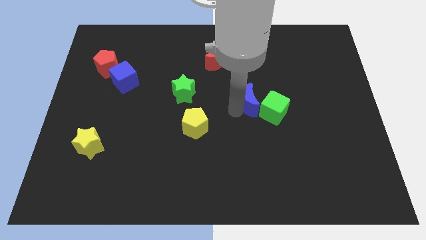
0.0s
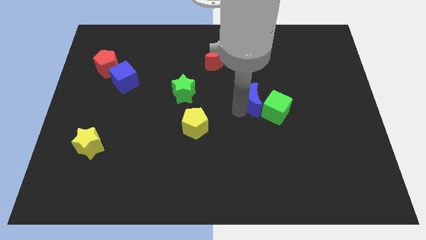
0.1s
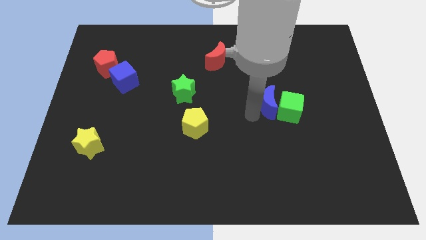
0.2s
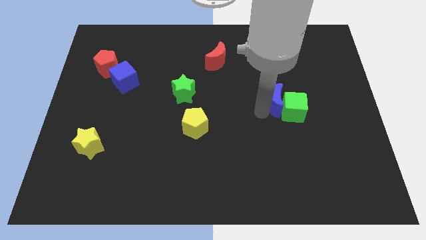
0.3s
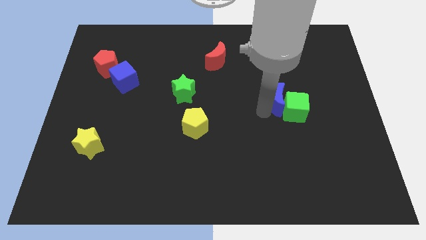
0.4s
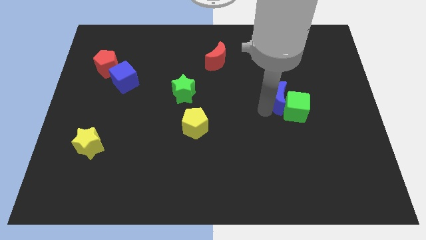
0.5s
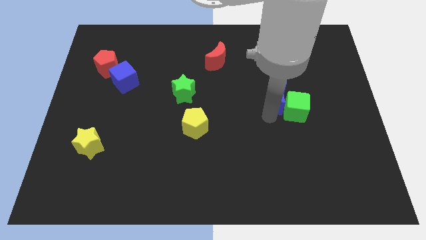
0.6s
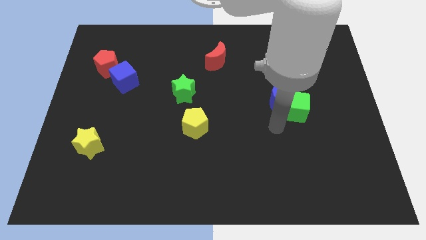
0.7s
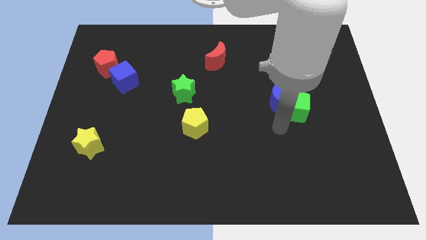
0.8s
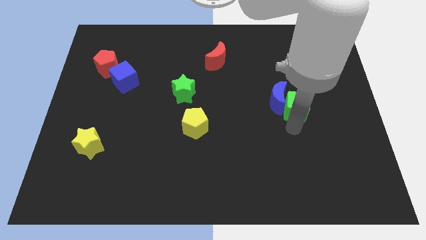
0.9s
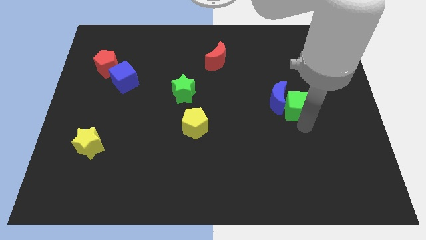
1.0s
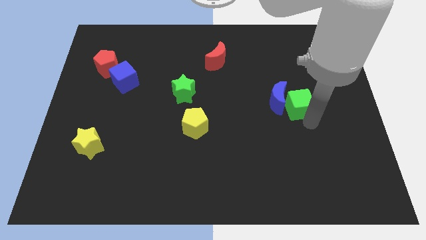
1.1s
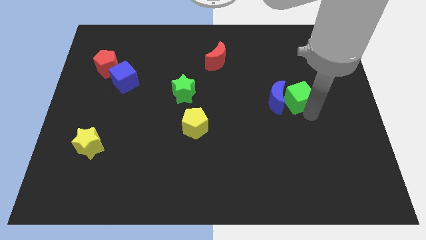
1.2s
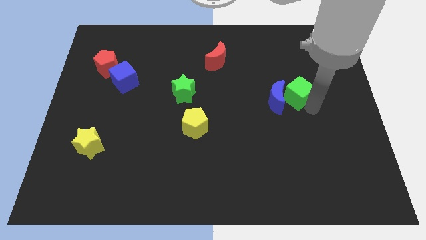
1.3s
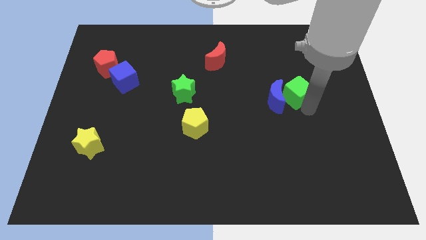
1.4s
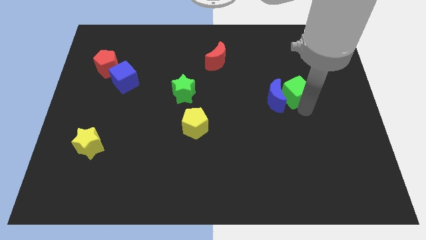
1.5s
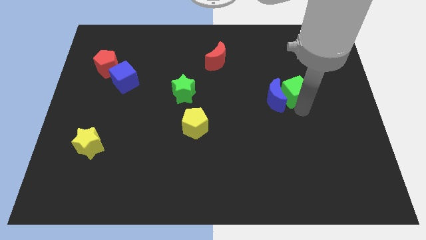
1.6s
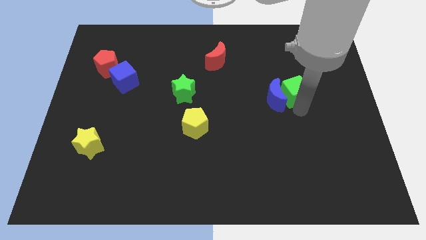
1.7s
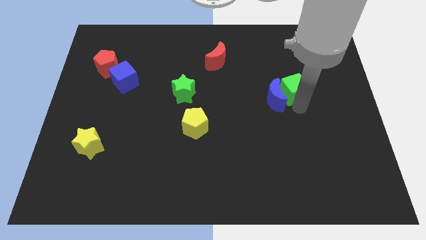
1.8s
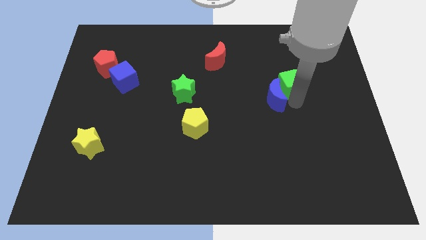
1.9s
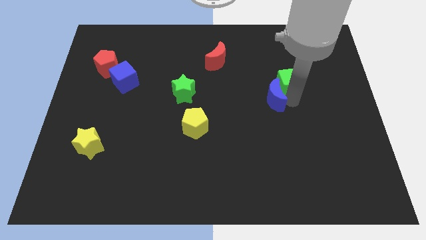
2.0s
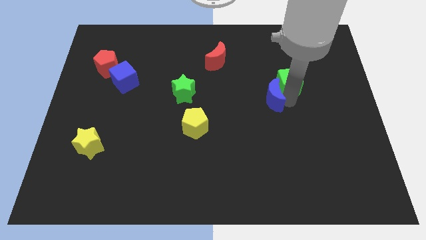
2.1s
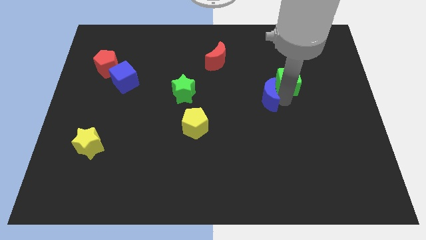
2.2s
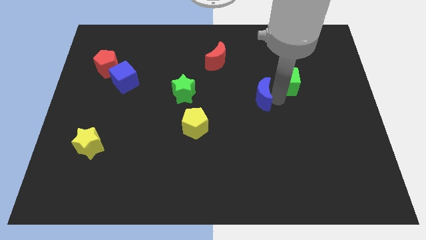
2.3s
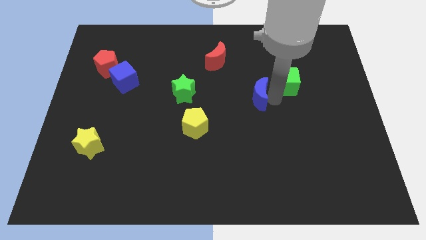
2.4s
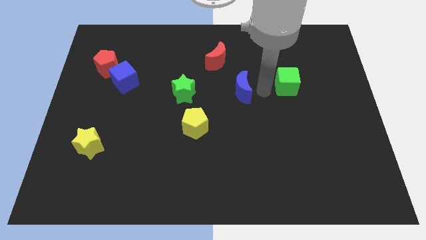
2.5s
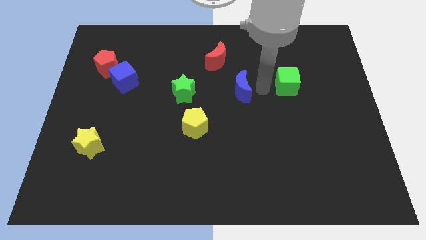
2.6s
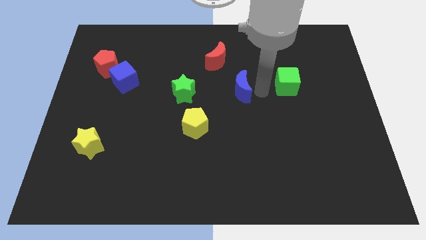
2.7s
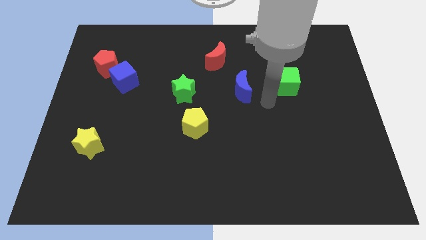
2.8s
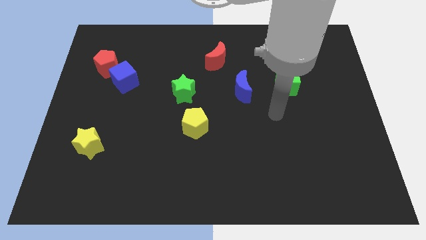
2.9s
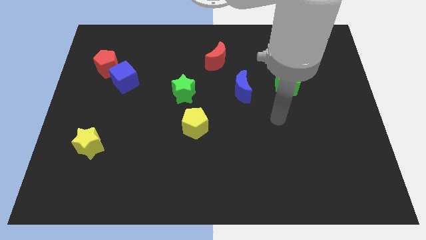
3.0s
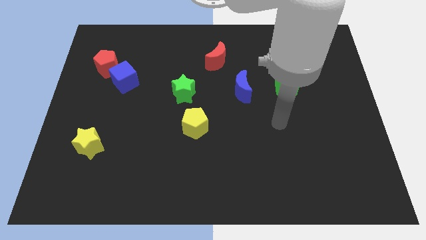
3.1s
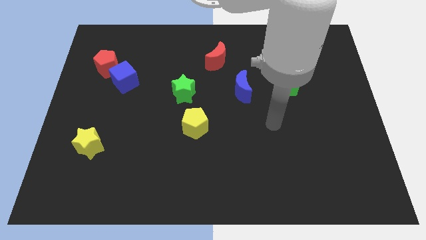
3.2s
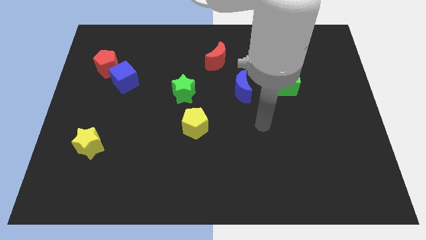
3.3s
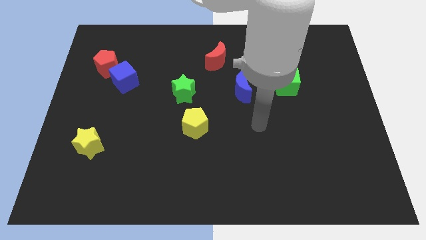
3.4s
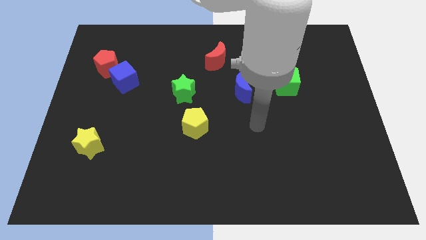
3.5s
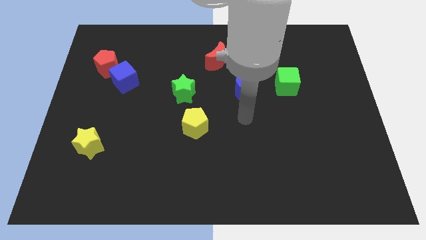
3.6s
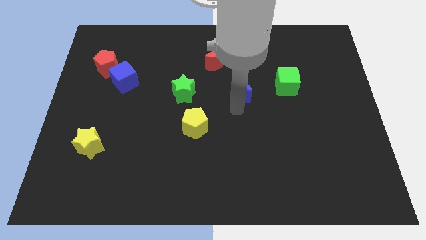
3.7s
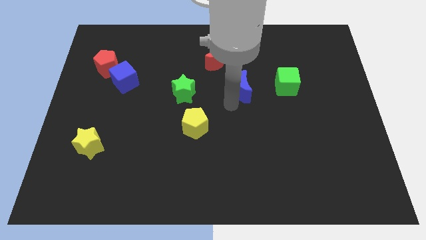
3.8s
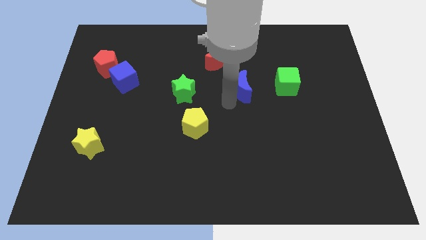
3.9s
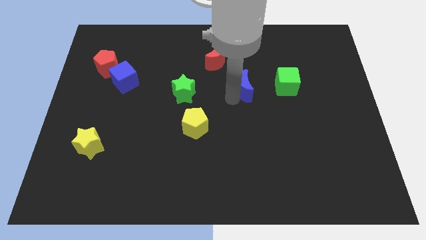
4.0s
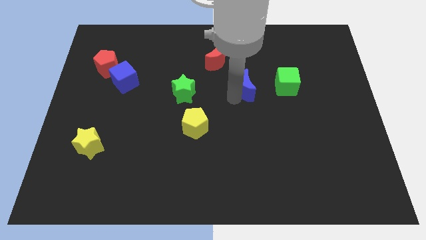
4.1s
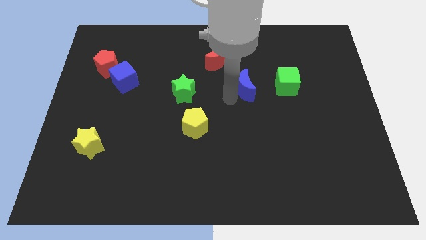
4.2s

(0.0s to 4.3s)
separate the blue moon from the green cube

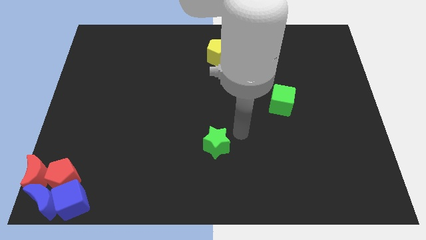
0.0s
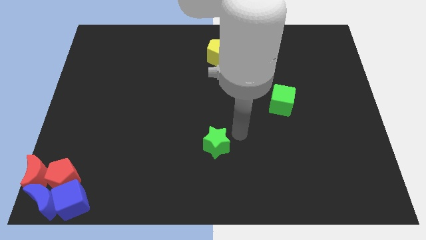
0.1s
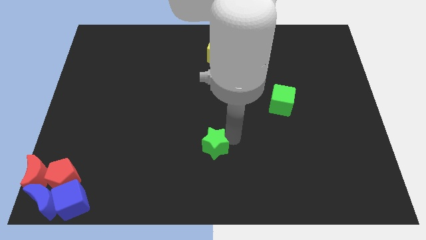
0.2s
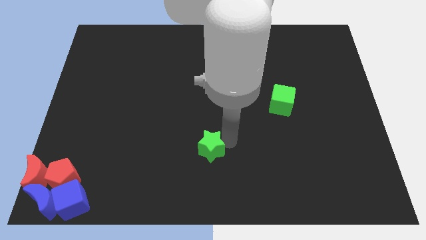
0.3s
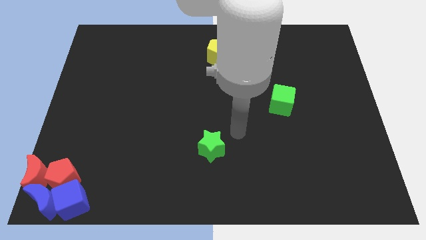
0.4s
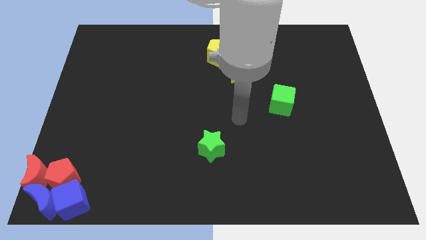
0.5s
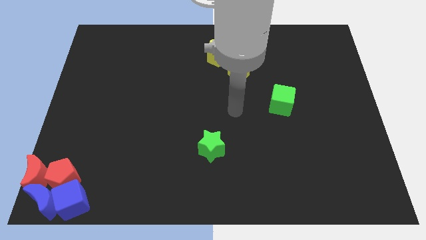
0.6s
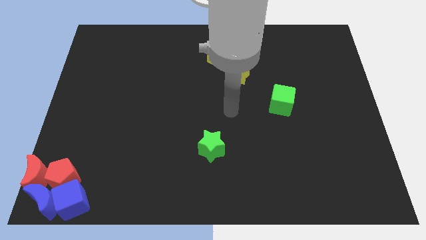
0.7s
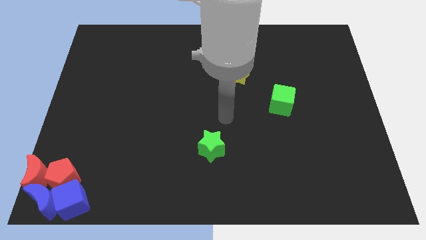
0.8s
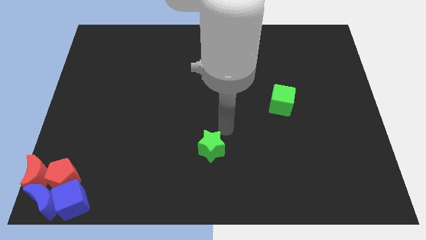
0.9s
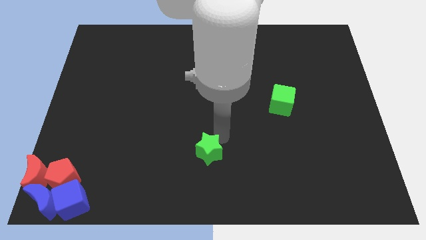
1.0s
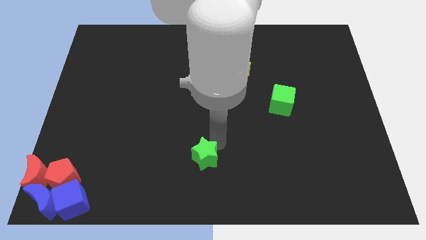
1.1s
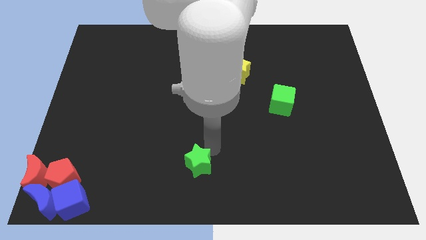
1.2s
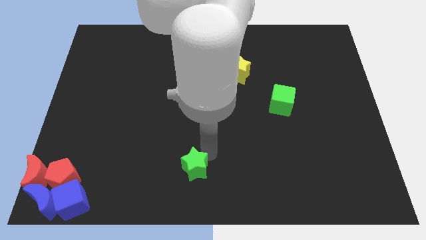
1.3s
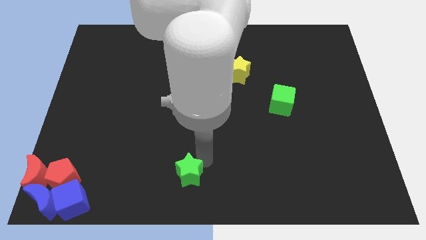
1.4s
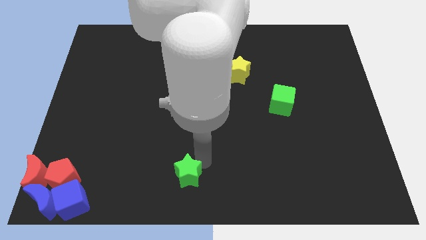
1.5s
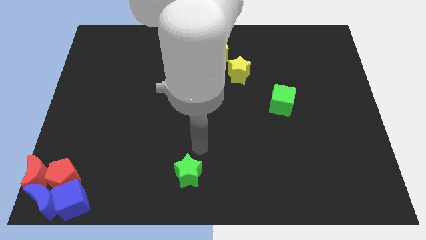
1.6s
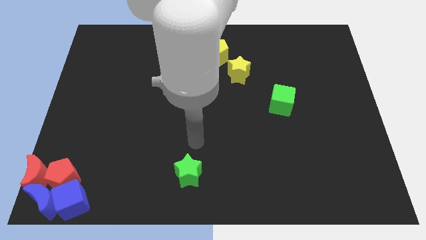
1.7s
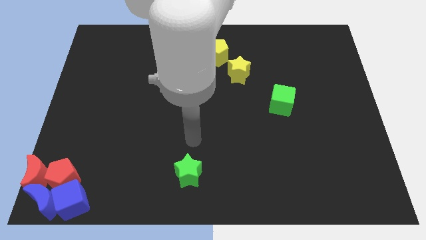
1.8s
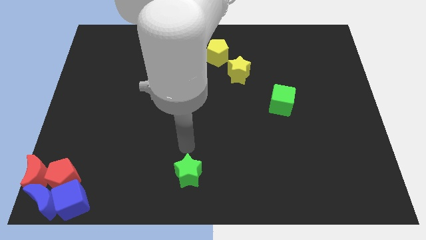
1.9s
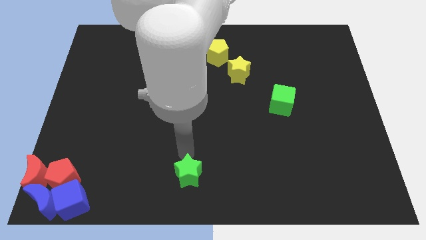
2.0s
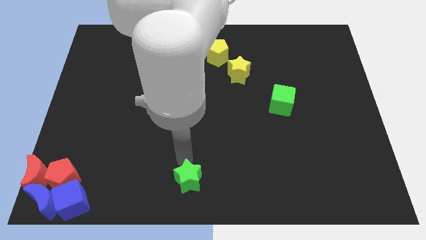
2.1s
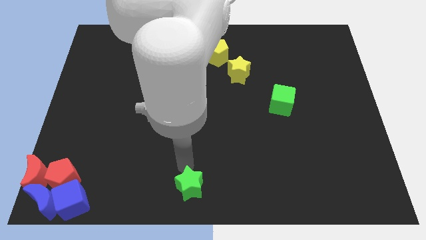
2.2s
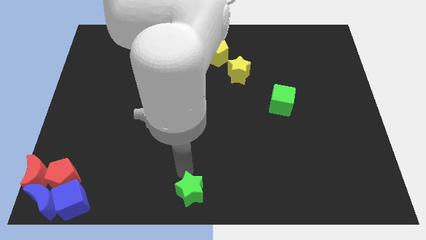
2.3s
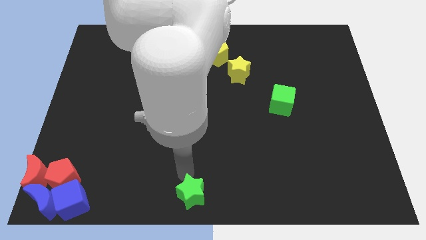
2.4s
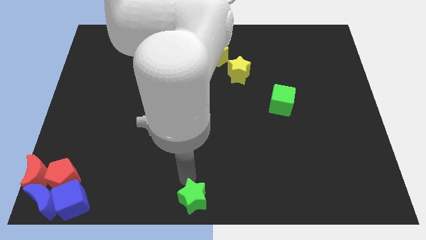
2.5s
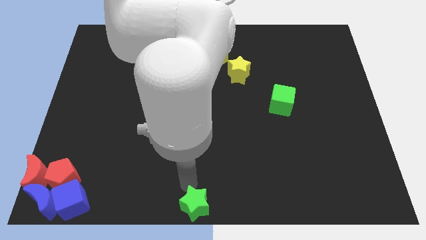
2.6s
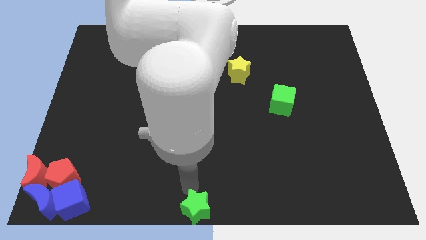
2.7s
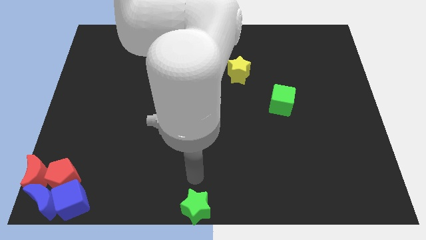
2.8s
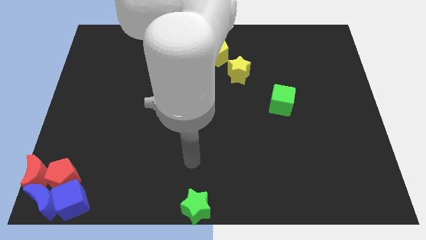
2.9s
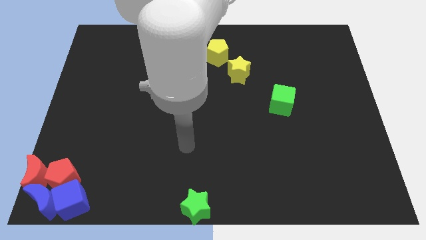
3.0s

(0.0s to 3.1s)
slide green star to the bottom center

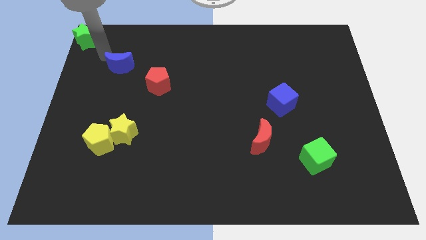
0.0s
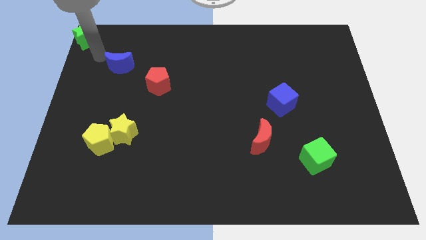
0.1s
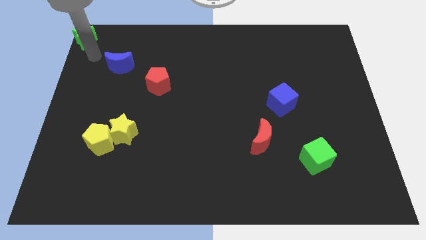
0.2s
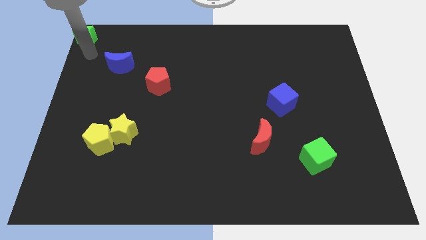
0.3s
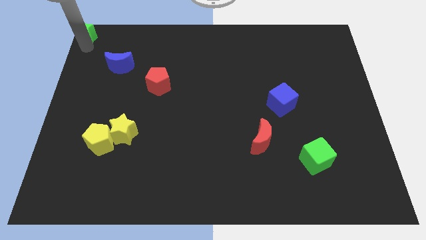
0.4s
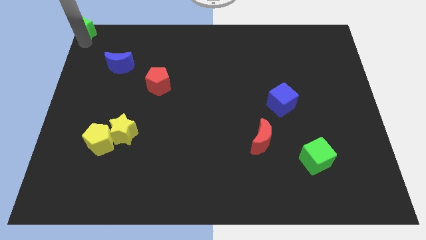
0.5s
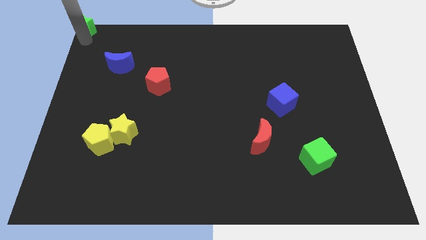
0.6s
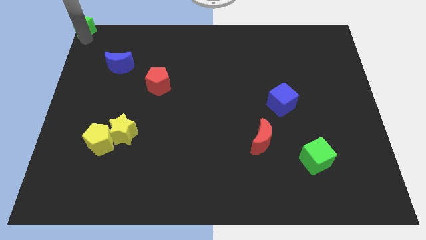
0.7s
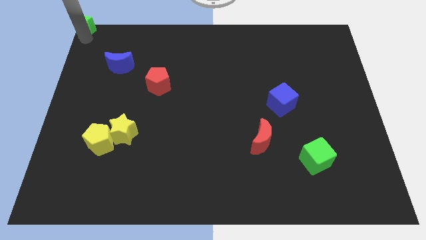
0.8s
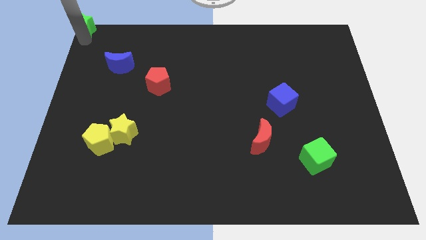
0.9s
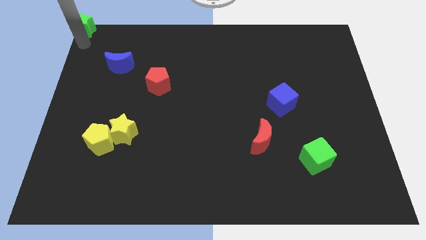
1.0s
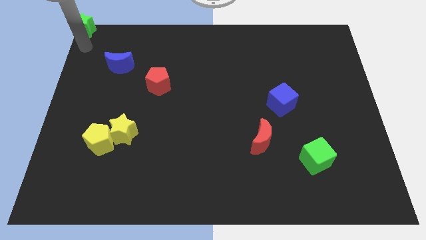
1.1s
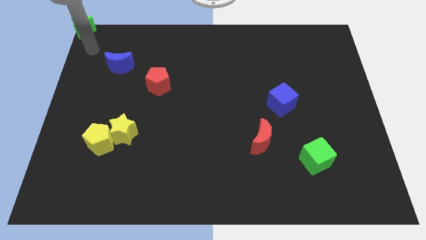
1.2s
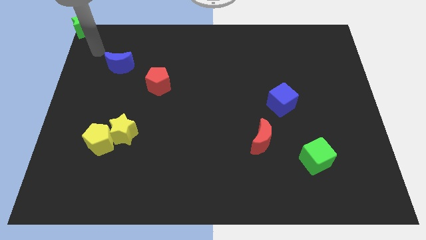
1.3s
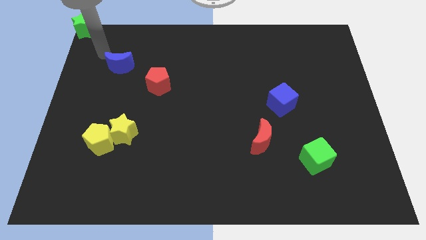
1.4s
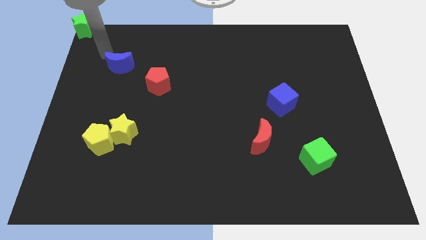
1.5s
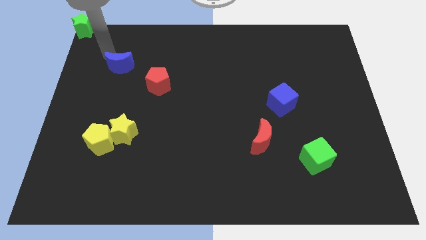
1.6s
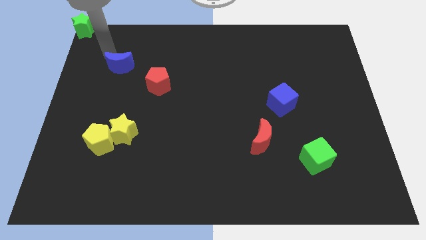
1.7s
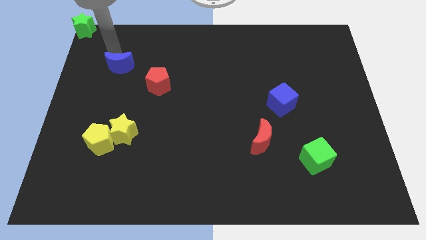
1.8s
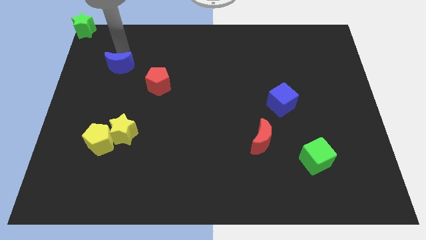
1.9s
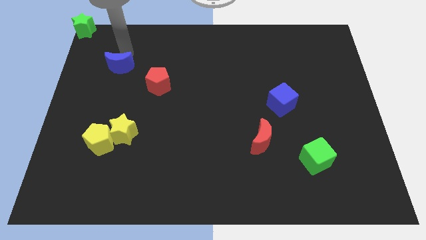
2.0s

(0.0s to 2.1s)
move green star top left
